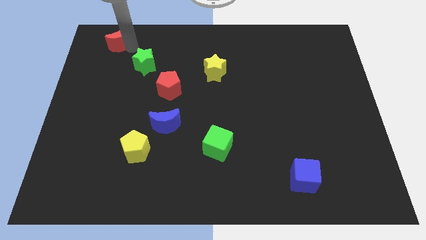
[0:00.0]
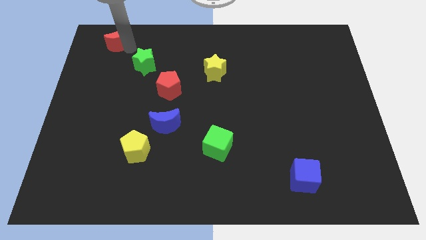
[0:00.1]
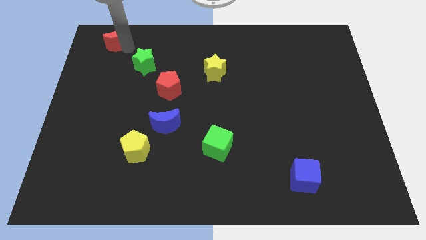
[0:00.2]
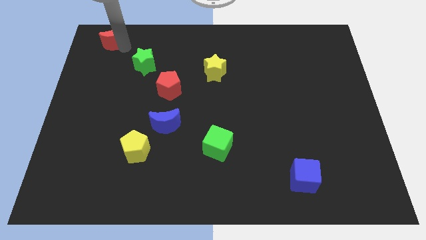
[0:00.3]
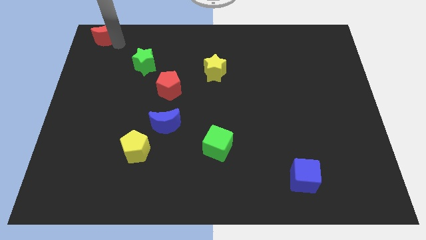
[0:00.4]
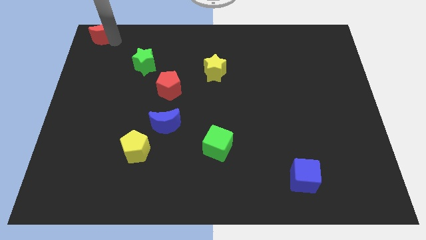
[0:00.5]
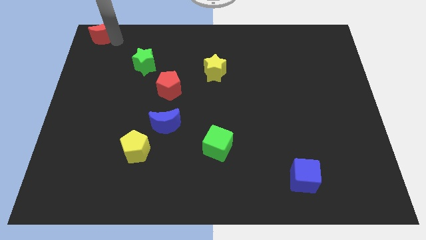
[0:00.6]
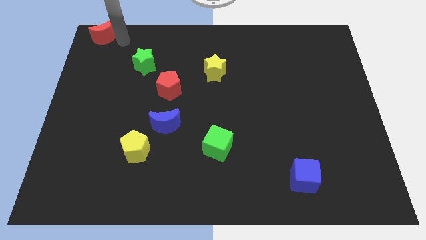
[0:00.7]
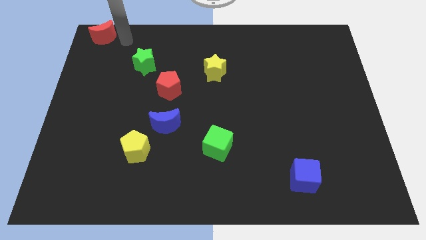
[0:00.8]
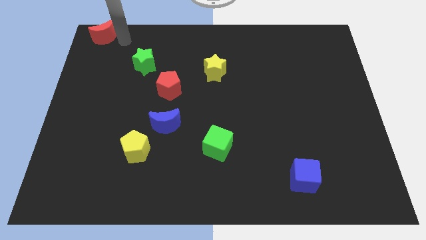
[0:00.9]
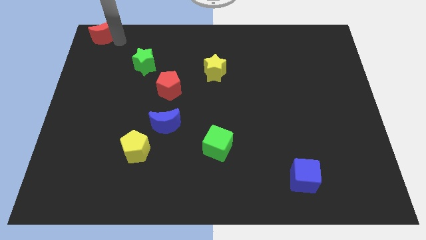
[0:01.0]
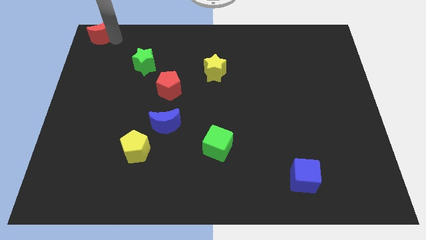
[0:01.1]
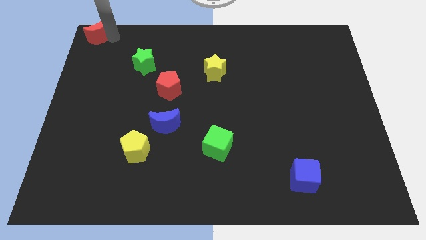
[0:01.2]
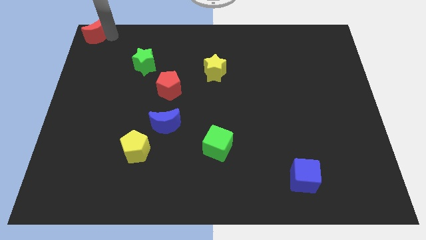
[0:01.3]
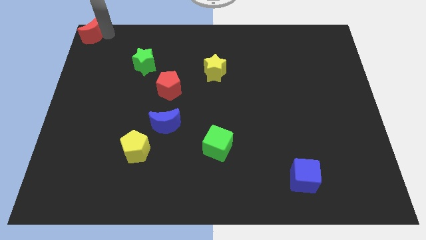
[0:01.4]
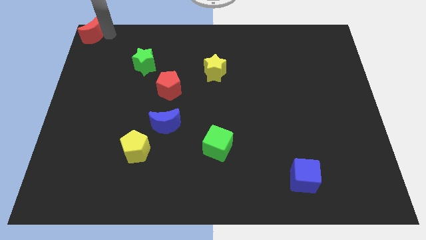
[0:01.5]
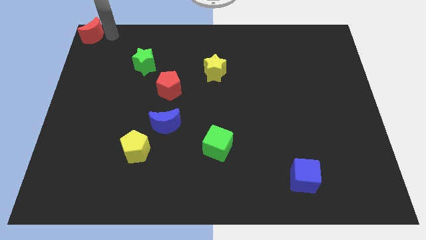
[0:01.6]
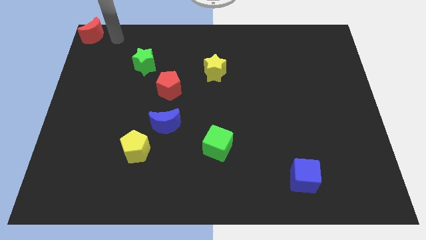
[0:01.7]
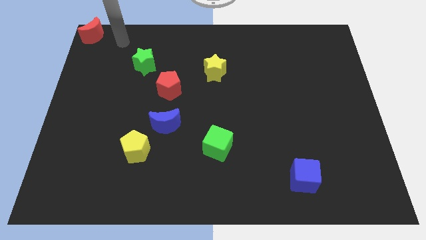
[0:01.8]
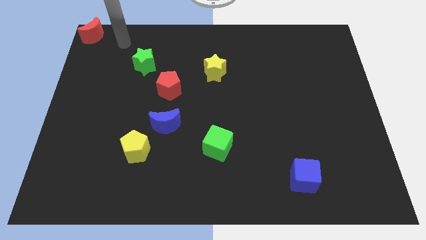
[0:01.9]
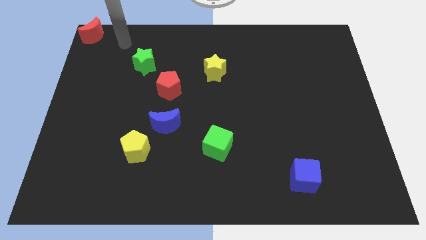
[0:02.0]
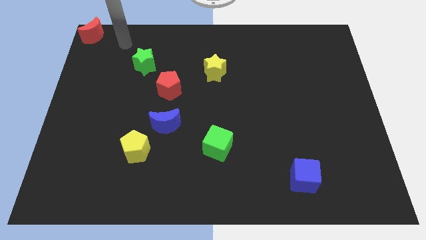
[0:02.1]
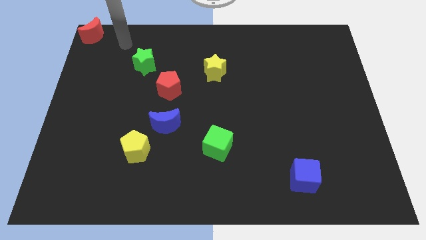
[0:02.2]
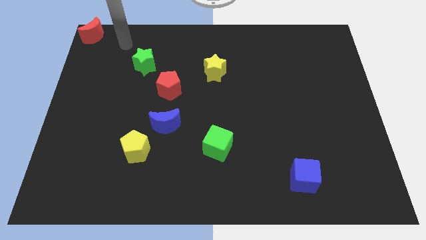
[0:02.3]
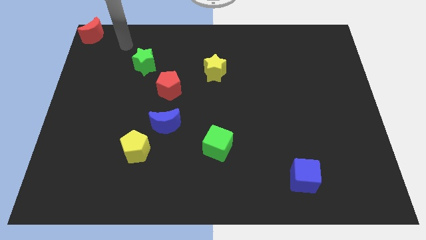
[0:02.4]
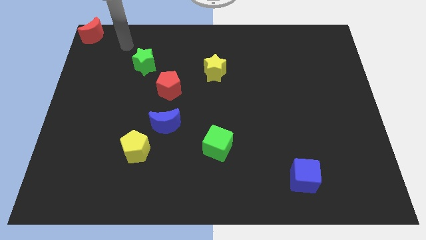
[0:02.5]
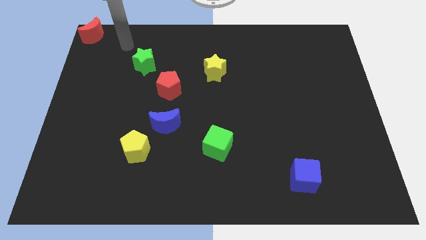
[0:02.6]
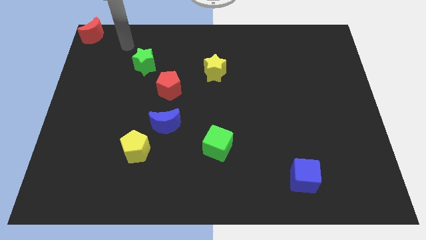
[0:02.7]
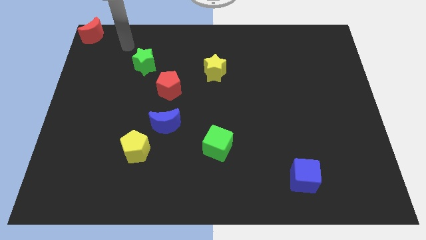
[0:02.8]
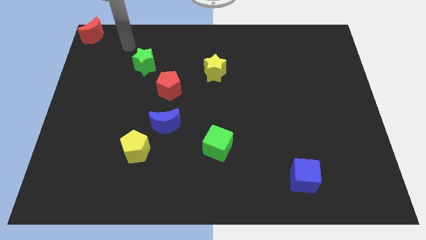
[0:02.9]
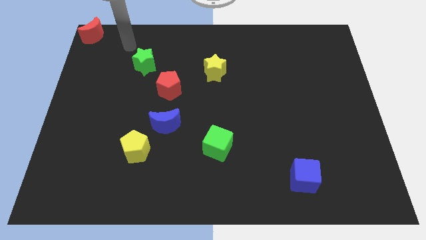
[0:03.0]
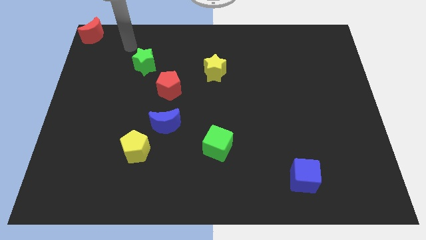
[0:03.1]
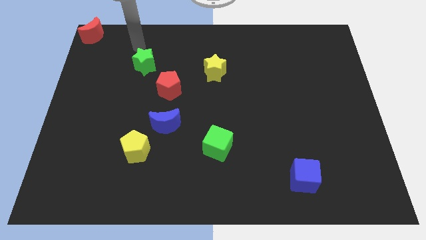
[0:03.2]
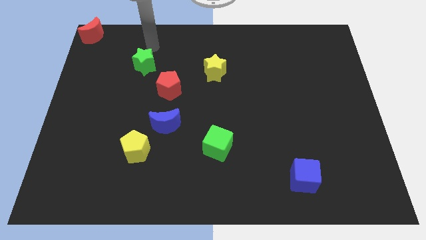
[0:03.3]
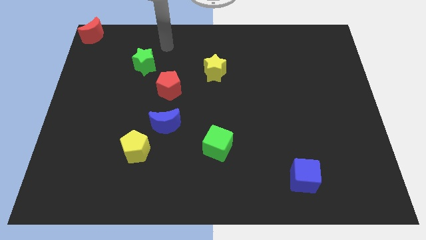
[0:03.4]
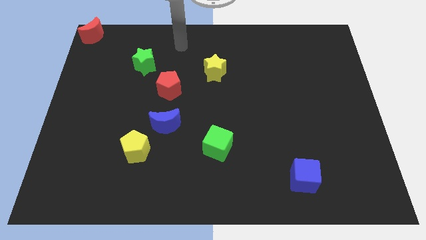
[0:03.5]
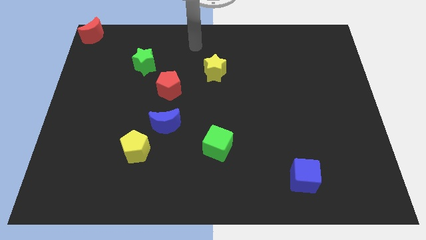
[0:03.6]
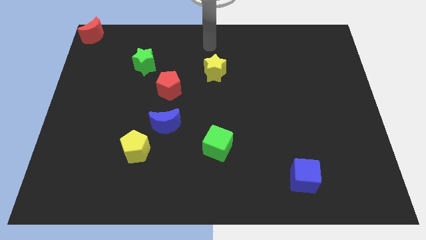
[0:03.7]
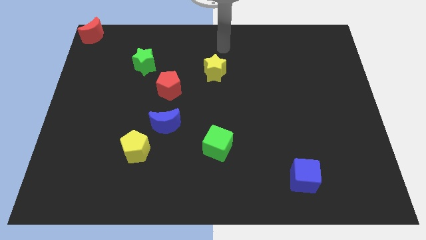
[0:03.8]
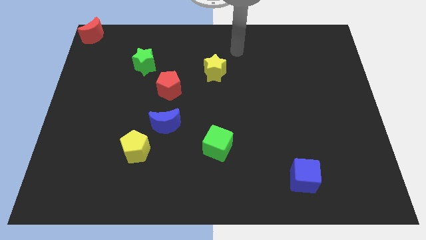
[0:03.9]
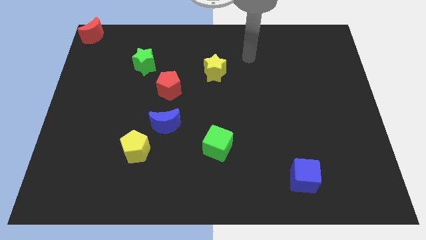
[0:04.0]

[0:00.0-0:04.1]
place the red crescent at the top left corner of the board

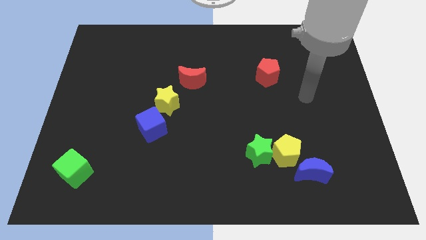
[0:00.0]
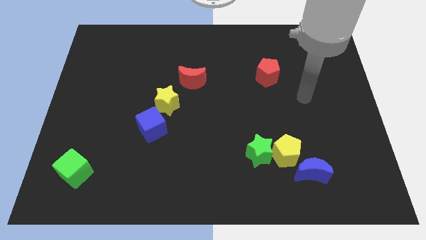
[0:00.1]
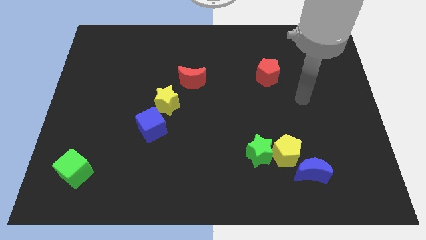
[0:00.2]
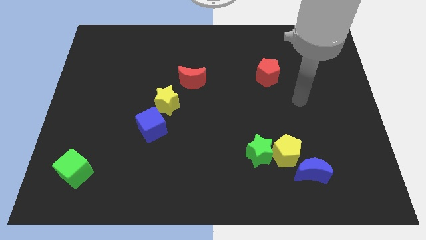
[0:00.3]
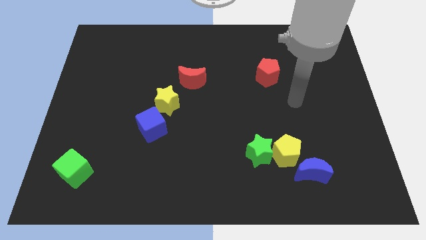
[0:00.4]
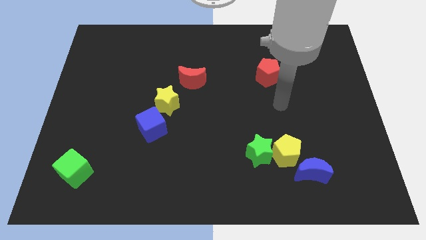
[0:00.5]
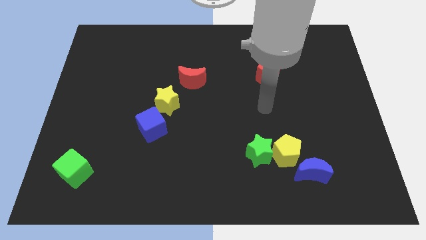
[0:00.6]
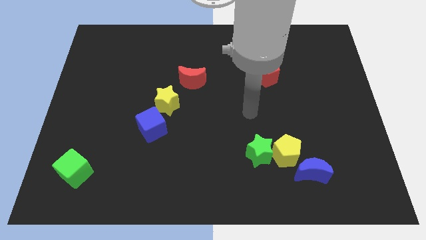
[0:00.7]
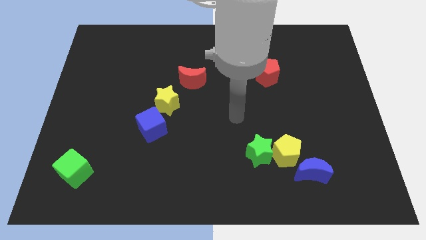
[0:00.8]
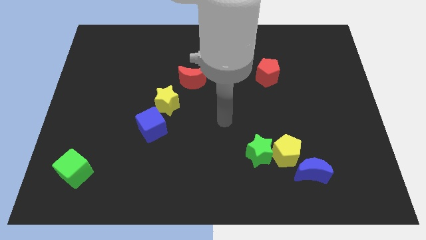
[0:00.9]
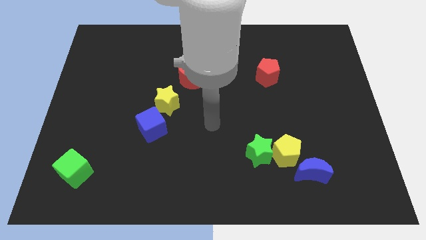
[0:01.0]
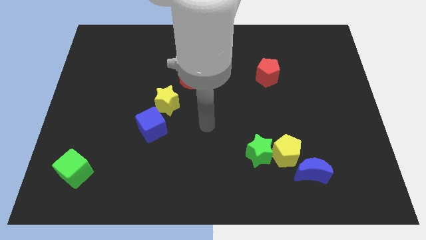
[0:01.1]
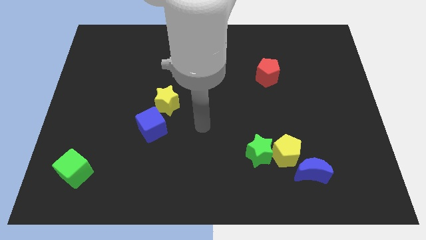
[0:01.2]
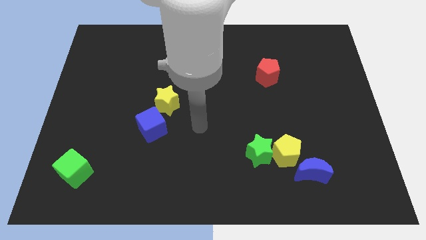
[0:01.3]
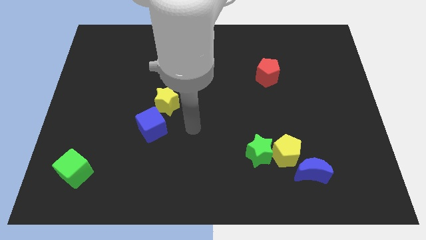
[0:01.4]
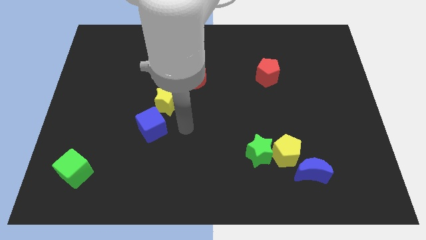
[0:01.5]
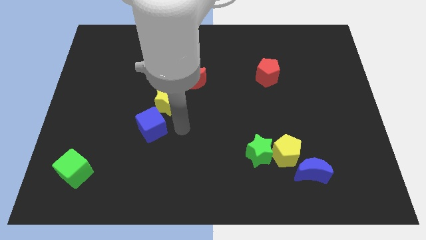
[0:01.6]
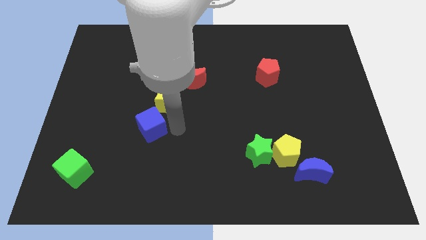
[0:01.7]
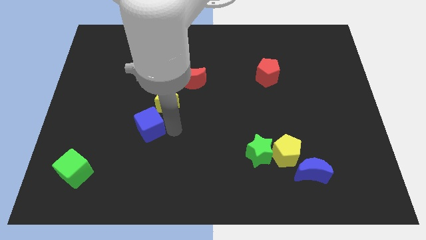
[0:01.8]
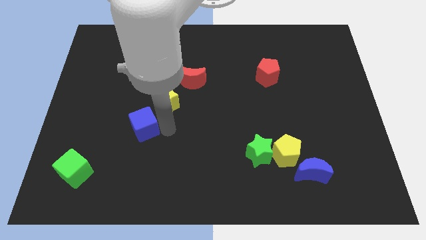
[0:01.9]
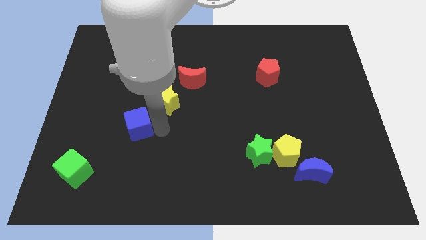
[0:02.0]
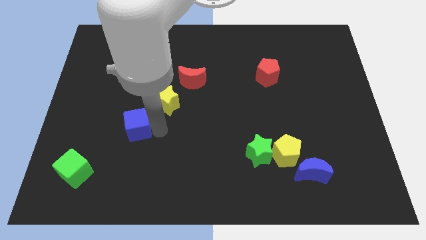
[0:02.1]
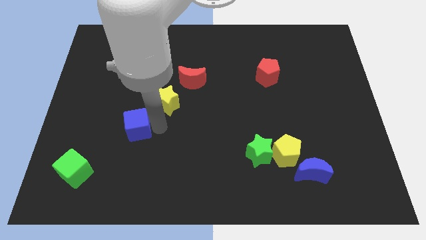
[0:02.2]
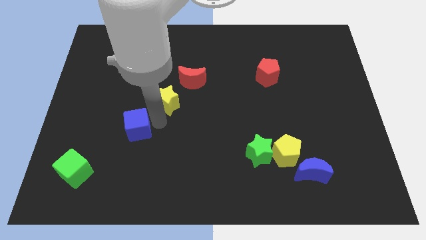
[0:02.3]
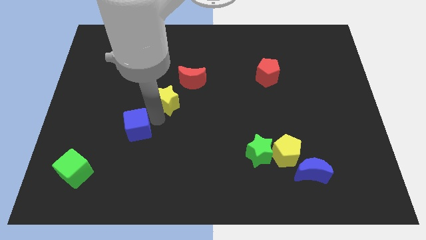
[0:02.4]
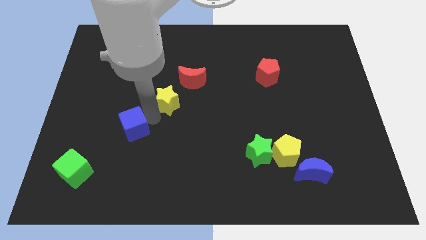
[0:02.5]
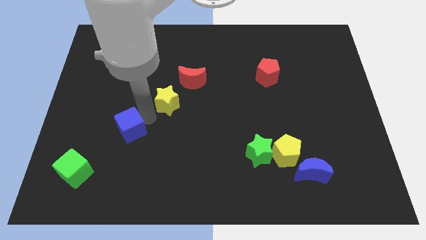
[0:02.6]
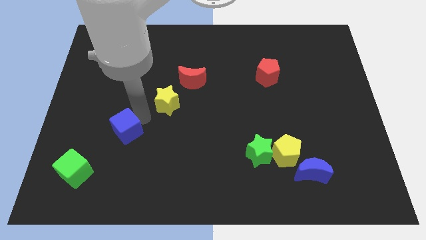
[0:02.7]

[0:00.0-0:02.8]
push the blue cube towards the green cube

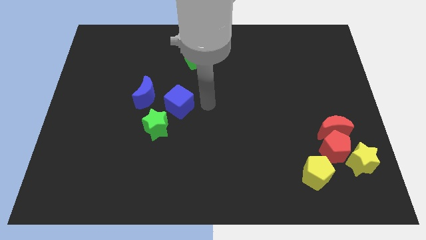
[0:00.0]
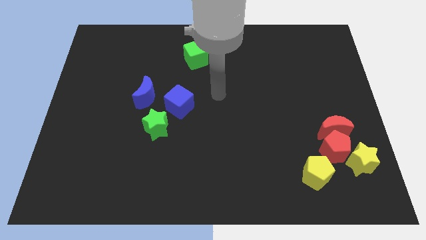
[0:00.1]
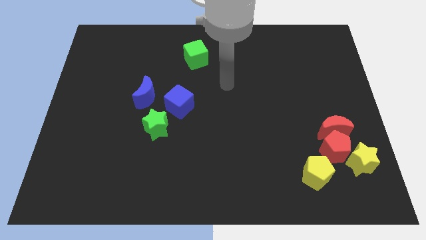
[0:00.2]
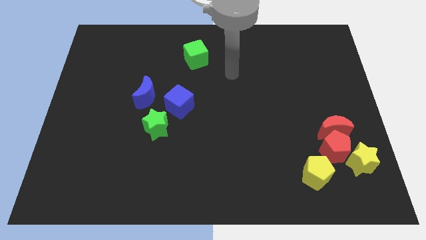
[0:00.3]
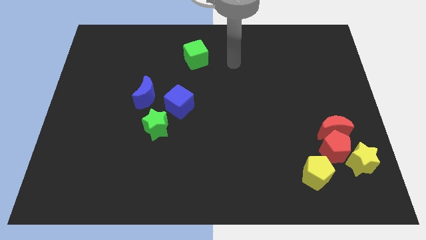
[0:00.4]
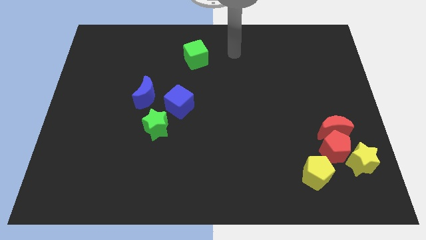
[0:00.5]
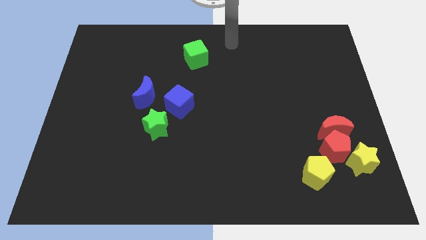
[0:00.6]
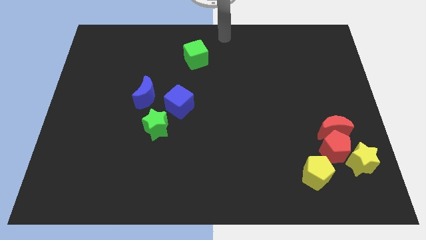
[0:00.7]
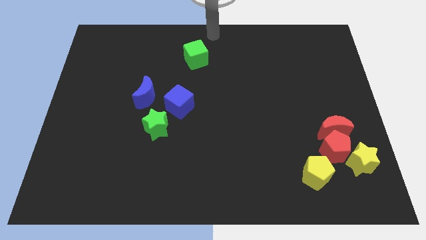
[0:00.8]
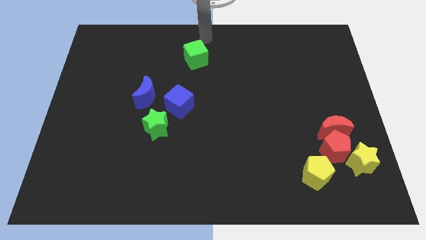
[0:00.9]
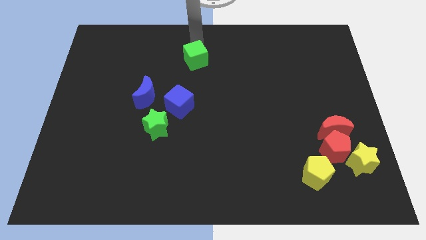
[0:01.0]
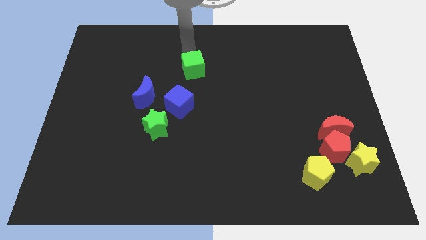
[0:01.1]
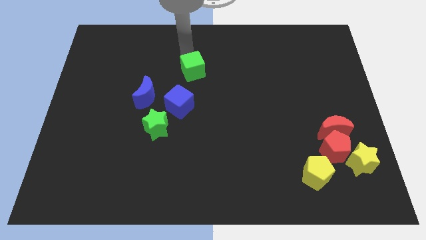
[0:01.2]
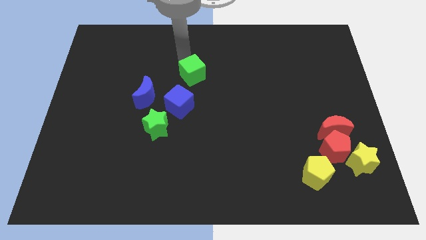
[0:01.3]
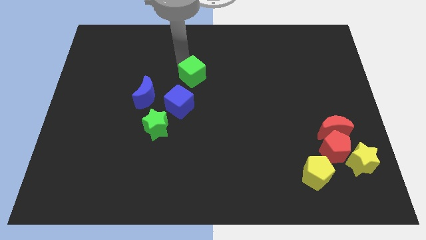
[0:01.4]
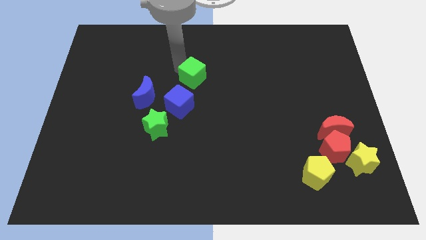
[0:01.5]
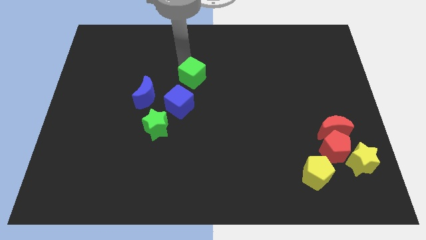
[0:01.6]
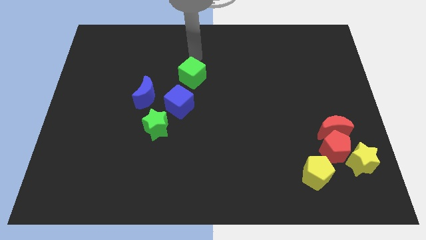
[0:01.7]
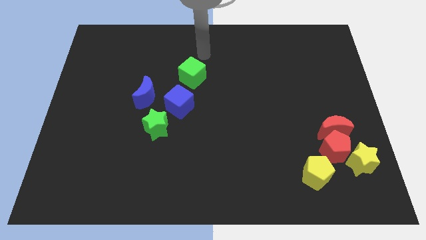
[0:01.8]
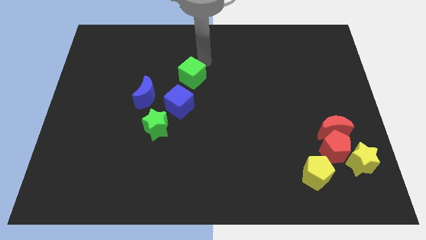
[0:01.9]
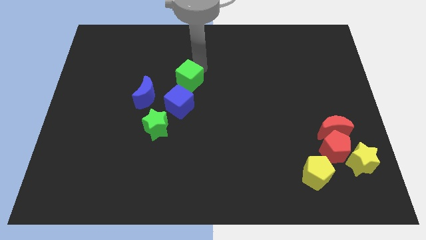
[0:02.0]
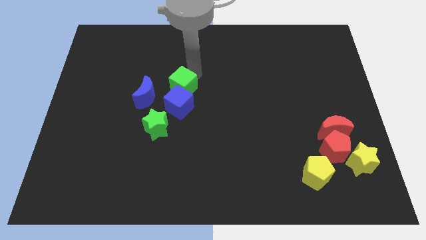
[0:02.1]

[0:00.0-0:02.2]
move the green cube into the blue cube
